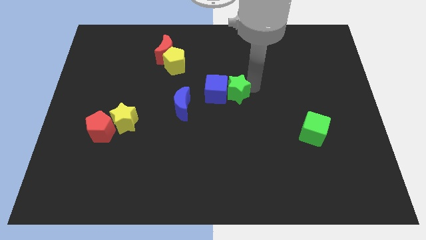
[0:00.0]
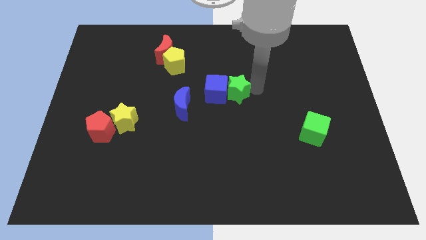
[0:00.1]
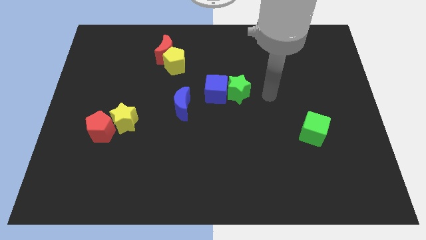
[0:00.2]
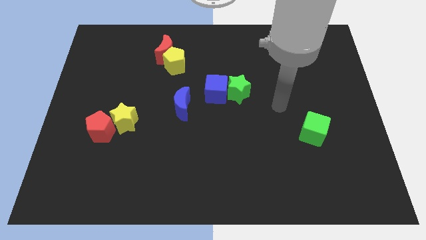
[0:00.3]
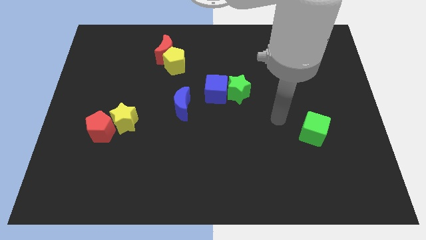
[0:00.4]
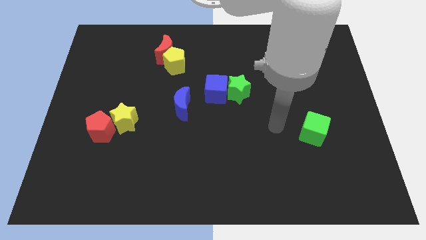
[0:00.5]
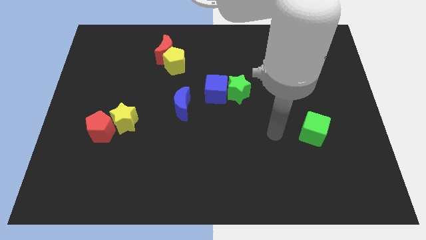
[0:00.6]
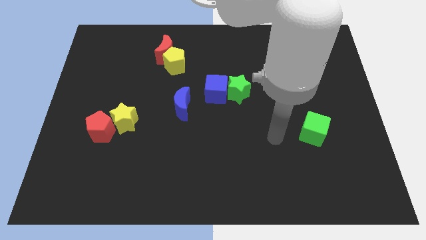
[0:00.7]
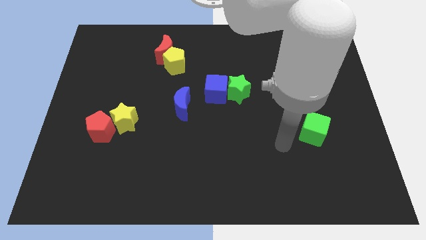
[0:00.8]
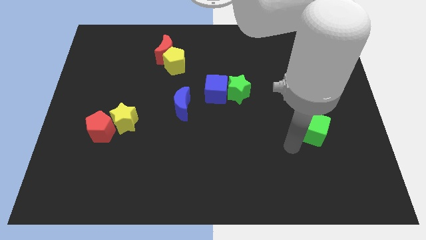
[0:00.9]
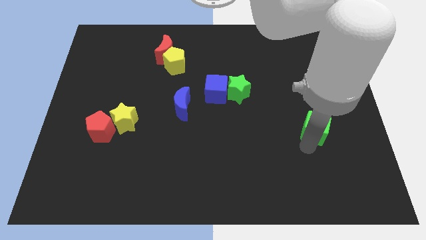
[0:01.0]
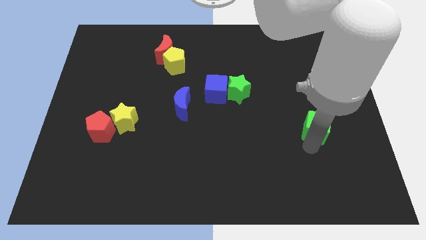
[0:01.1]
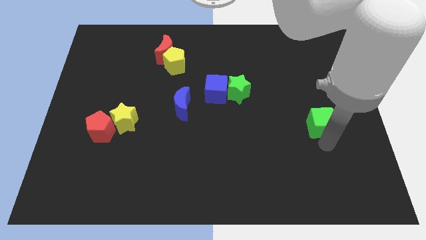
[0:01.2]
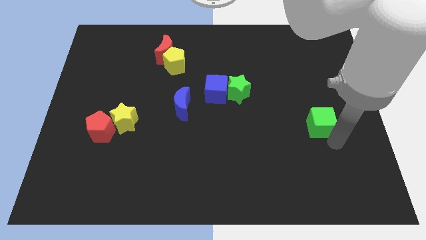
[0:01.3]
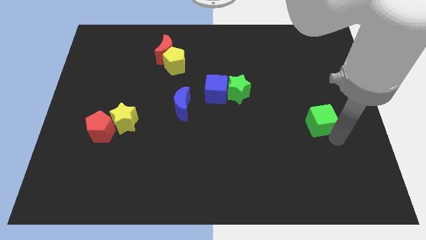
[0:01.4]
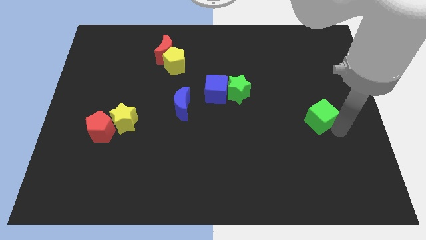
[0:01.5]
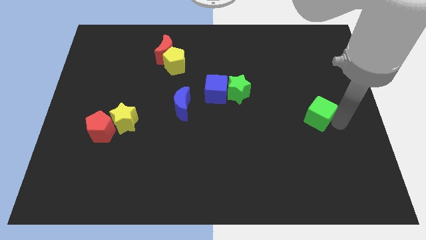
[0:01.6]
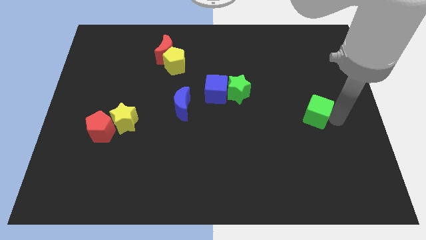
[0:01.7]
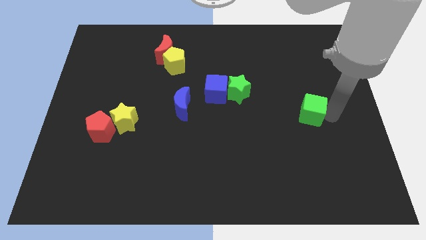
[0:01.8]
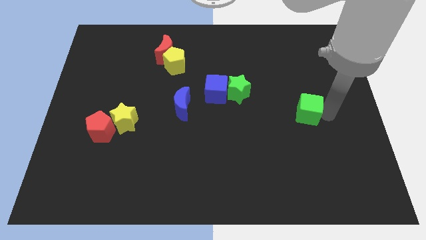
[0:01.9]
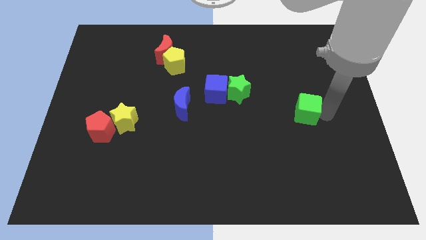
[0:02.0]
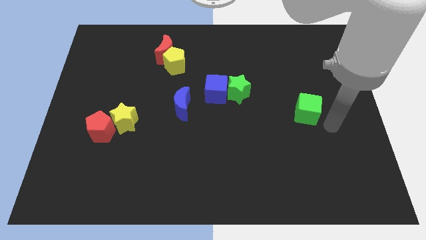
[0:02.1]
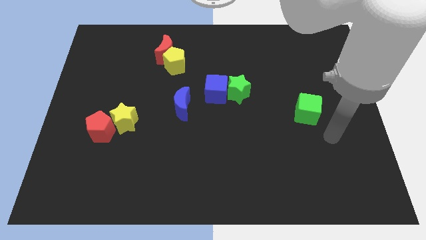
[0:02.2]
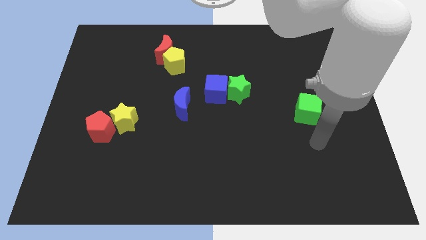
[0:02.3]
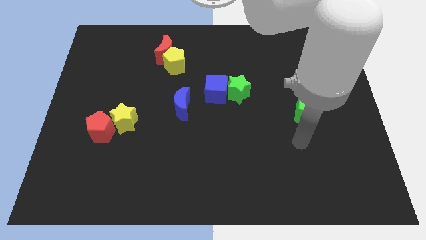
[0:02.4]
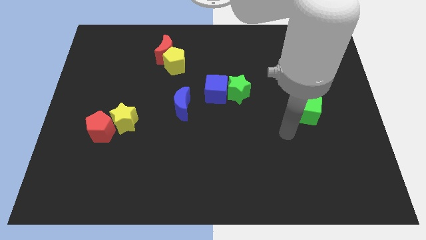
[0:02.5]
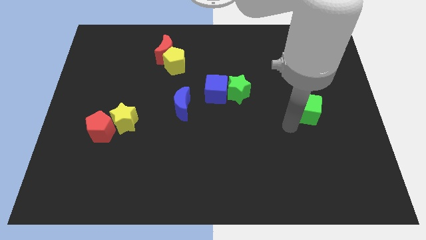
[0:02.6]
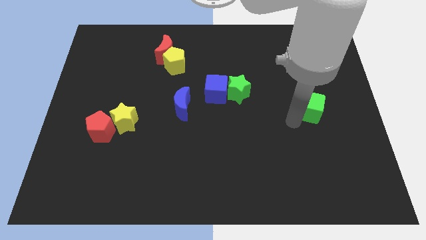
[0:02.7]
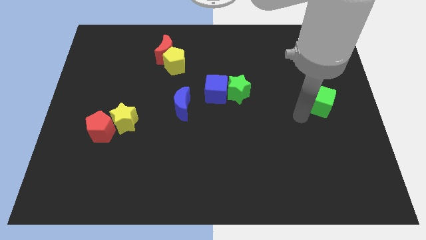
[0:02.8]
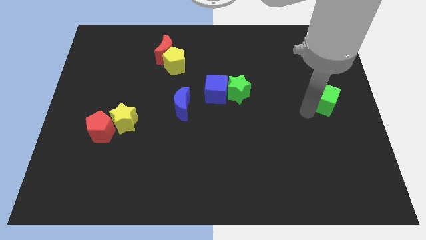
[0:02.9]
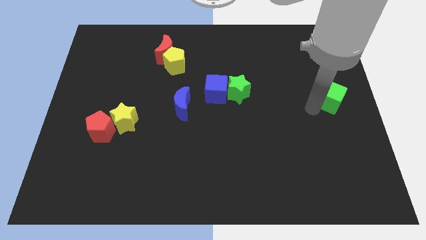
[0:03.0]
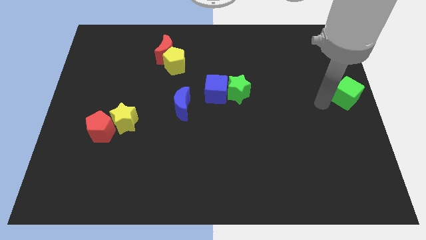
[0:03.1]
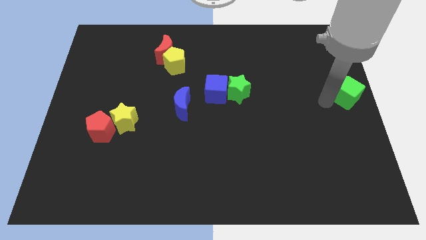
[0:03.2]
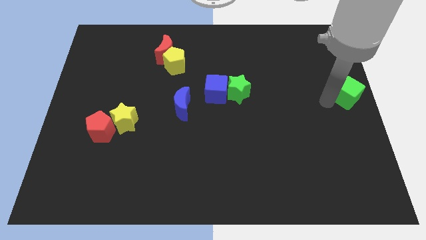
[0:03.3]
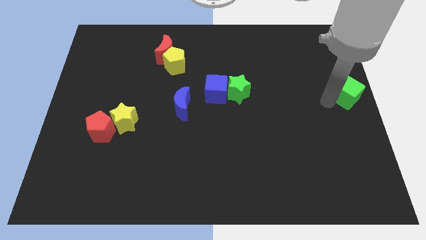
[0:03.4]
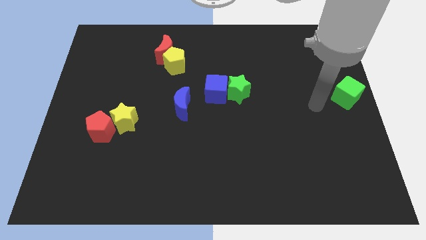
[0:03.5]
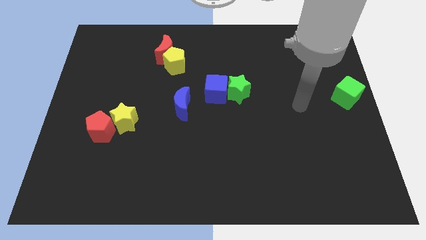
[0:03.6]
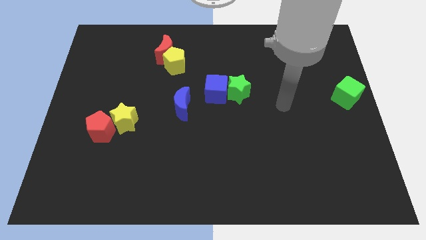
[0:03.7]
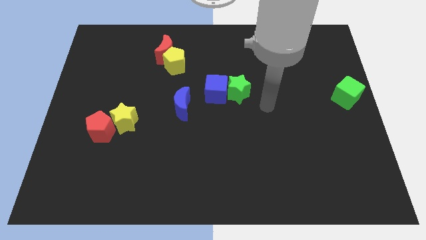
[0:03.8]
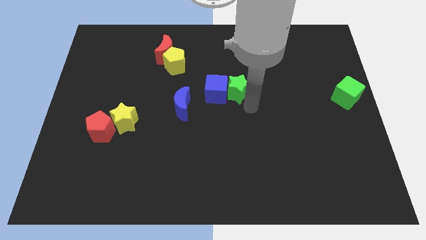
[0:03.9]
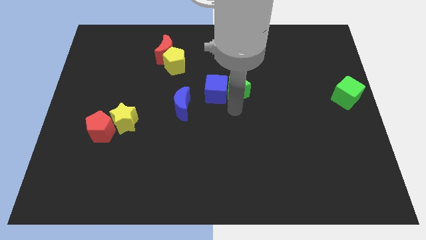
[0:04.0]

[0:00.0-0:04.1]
slide green cube to the center right

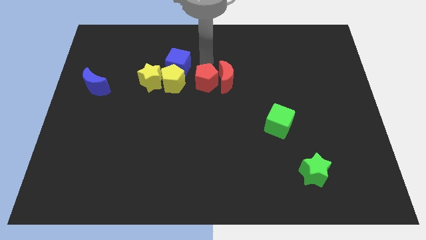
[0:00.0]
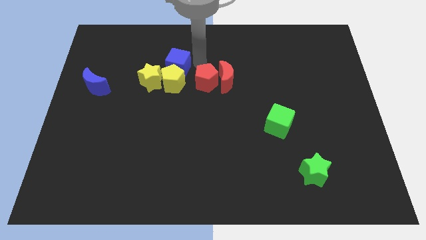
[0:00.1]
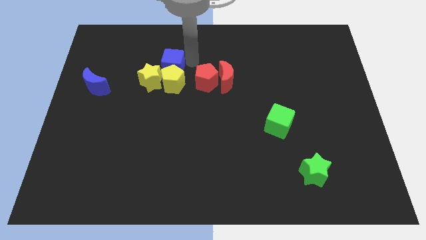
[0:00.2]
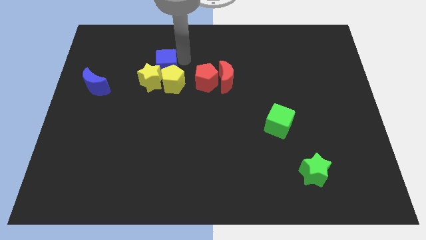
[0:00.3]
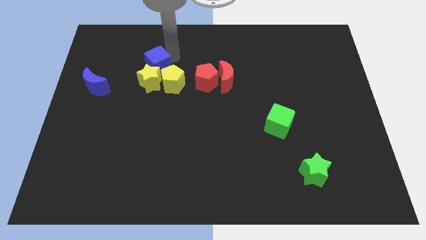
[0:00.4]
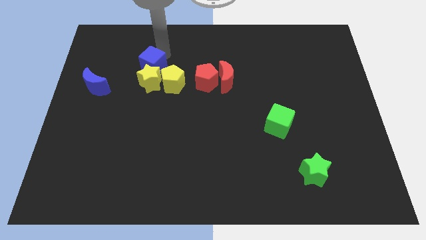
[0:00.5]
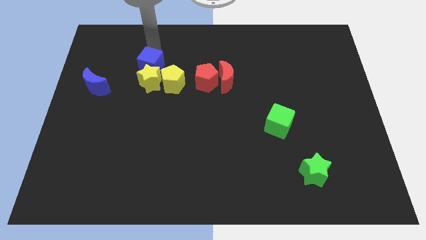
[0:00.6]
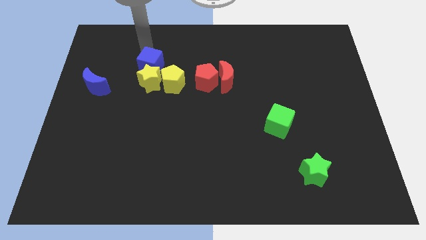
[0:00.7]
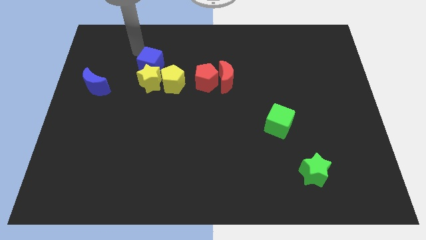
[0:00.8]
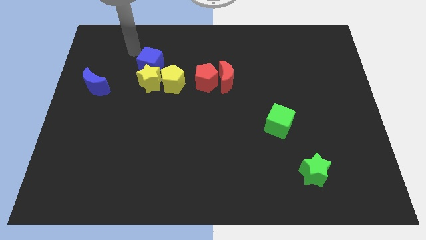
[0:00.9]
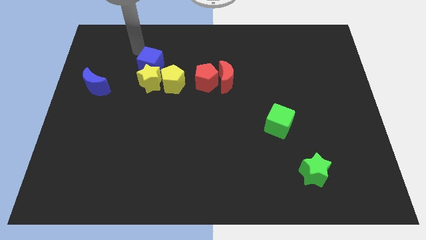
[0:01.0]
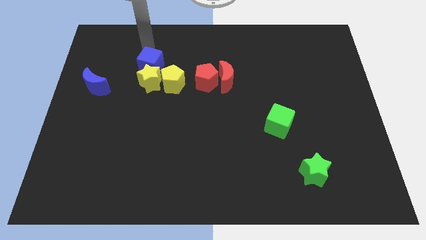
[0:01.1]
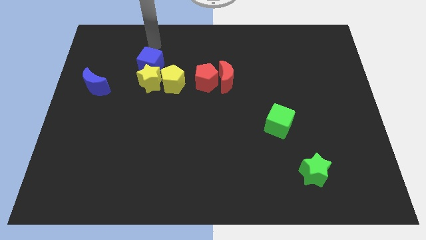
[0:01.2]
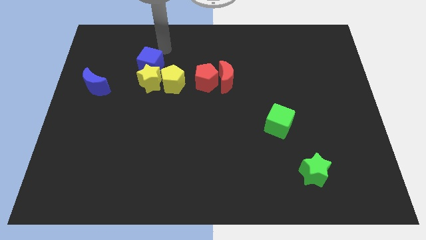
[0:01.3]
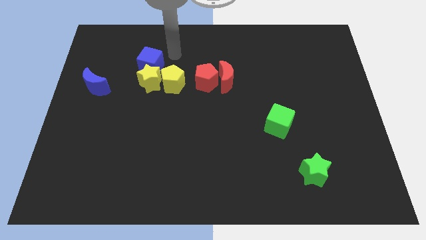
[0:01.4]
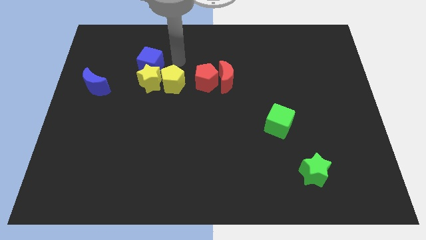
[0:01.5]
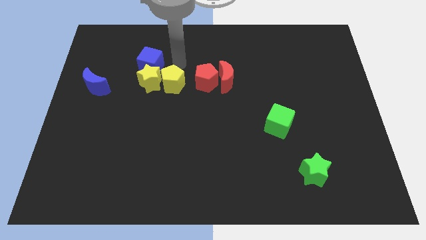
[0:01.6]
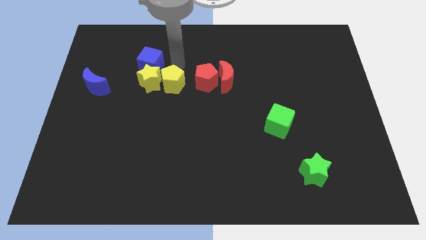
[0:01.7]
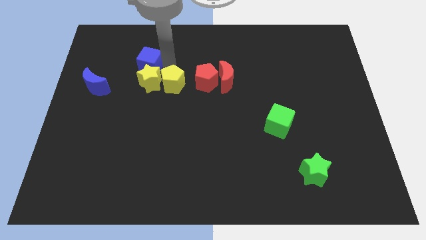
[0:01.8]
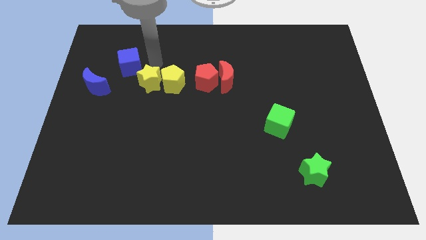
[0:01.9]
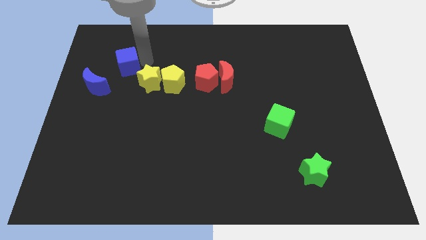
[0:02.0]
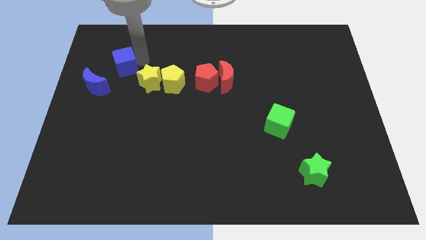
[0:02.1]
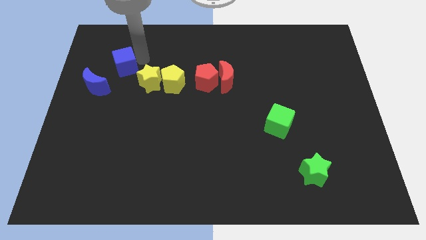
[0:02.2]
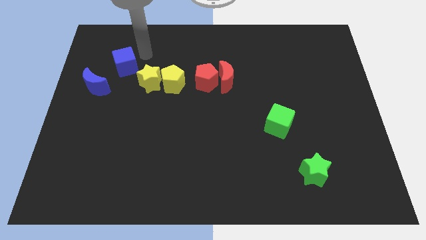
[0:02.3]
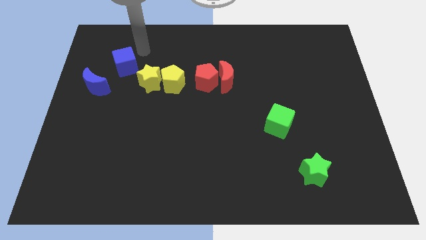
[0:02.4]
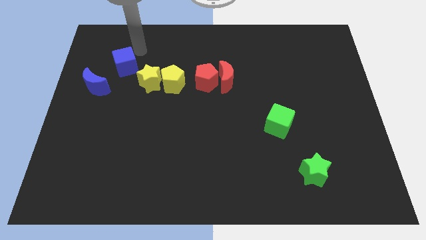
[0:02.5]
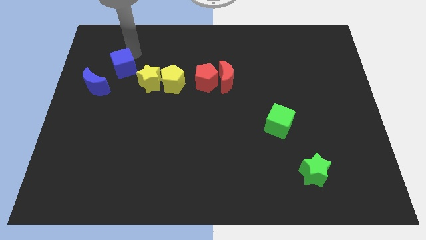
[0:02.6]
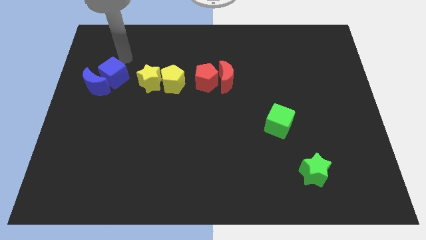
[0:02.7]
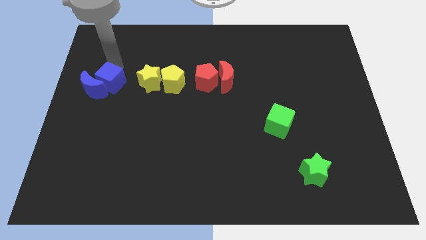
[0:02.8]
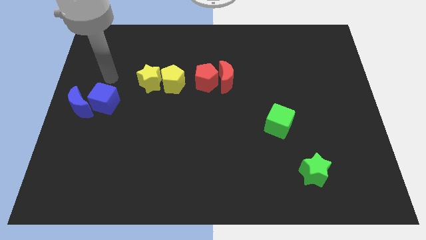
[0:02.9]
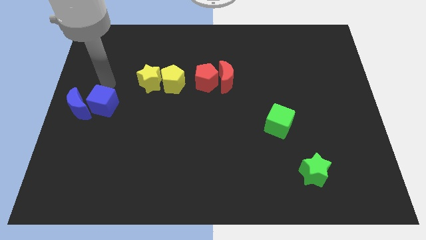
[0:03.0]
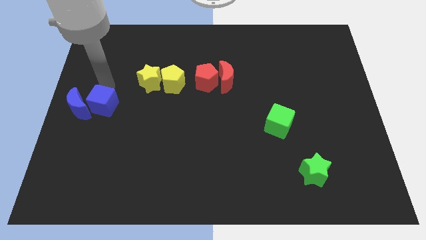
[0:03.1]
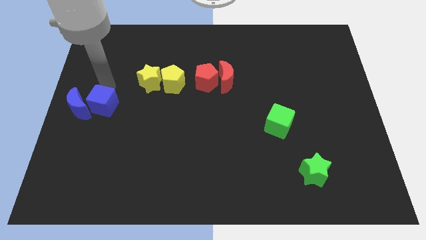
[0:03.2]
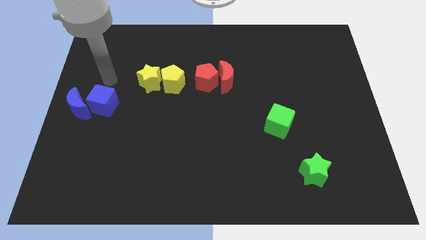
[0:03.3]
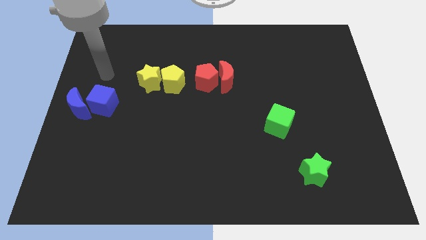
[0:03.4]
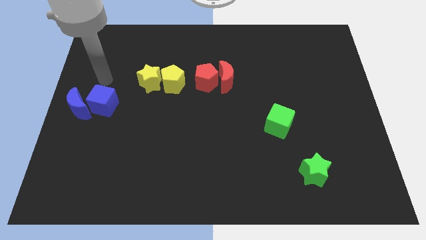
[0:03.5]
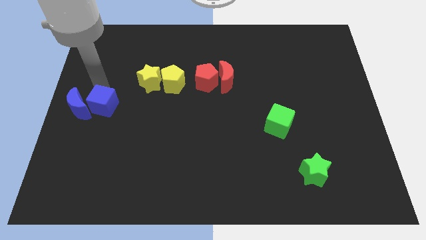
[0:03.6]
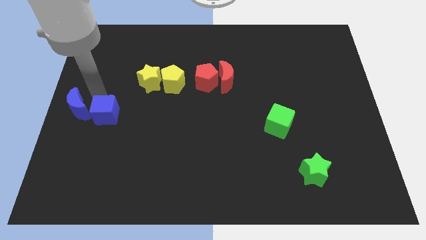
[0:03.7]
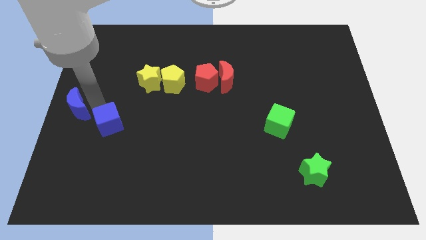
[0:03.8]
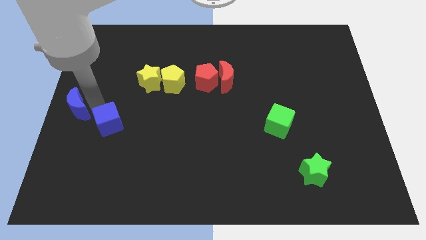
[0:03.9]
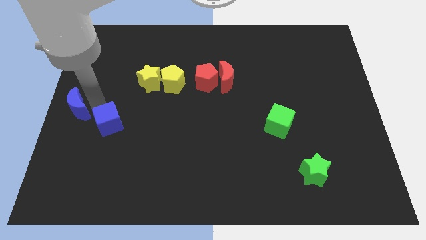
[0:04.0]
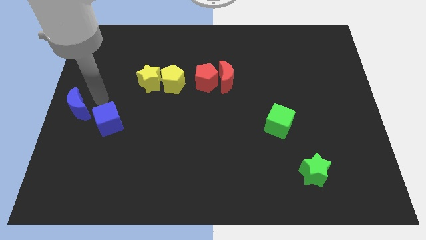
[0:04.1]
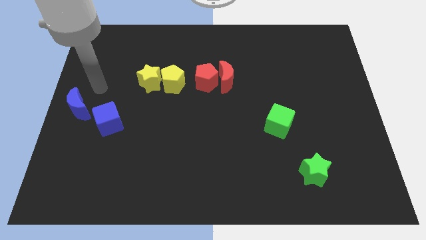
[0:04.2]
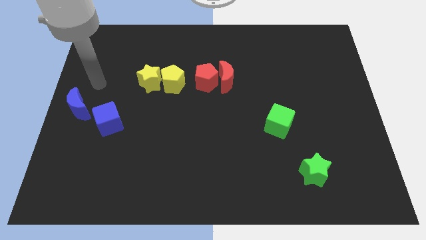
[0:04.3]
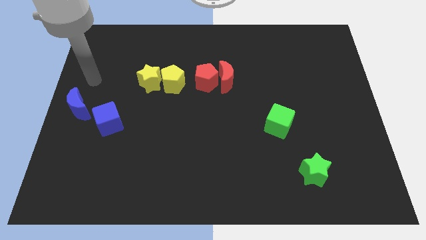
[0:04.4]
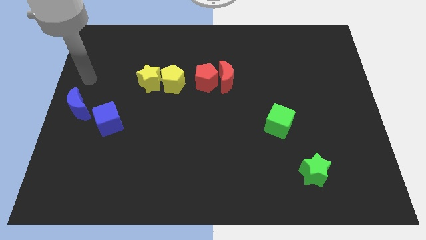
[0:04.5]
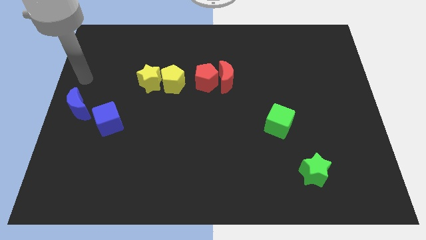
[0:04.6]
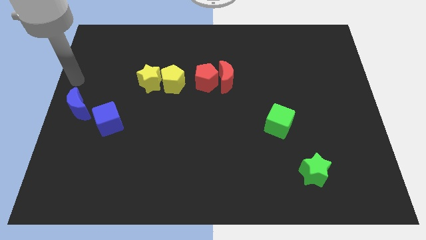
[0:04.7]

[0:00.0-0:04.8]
push the blue cube into the blue crescent

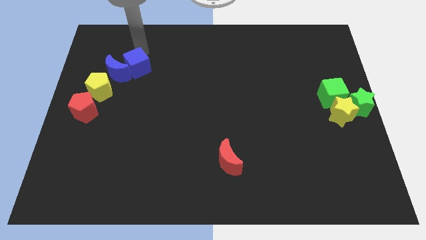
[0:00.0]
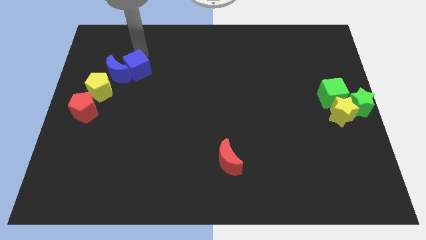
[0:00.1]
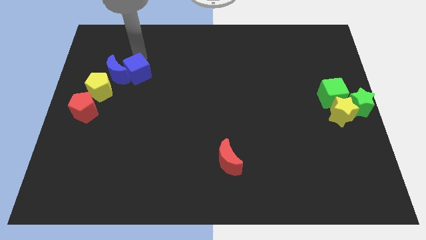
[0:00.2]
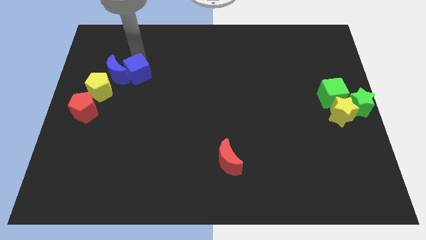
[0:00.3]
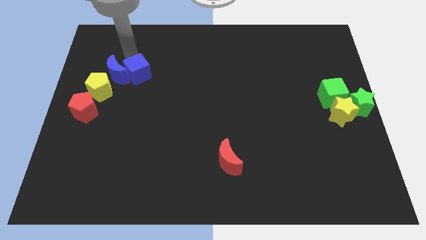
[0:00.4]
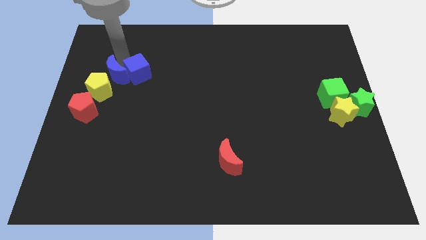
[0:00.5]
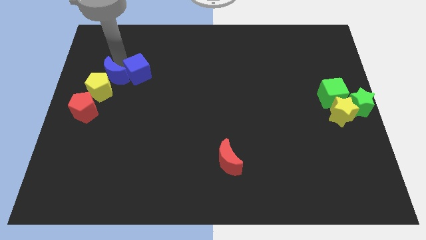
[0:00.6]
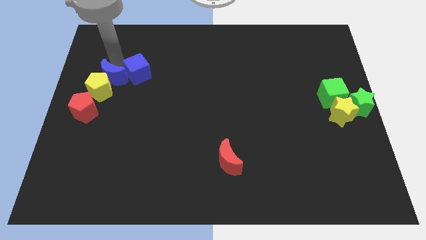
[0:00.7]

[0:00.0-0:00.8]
move the blue cube to the right of the blue crescent
